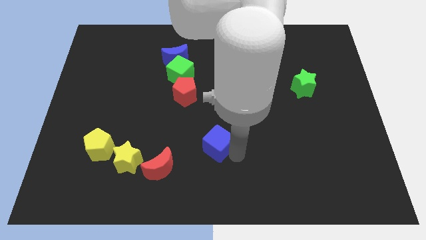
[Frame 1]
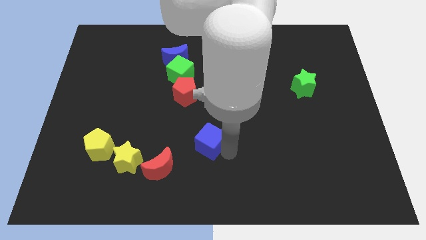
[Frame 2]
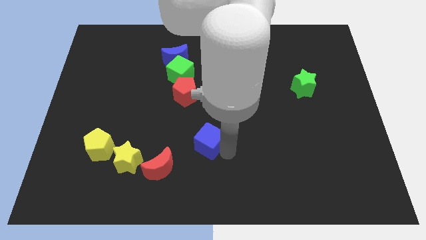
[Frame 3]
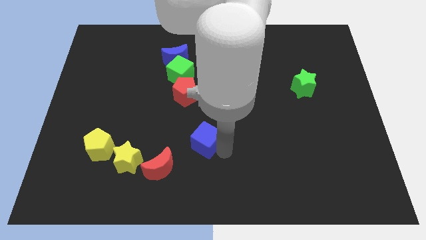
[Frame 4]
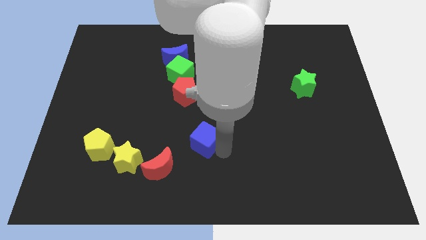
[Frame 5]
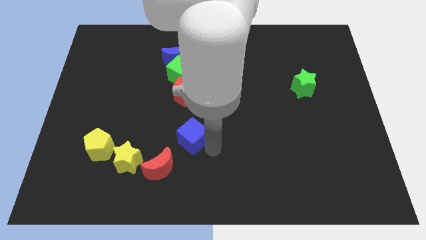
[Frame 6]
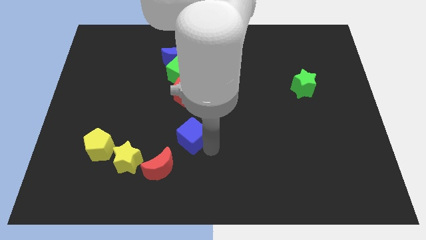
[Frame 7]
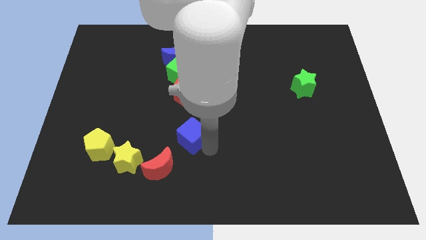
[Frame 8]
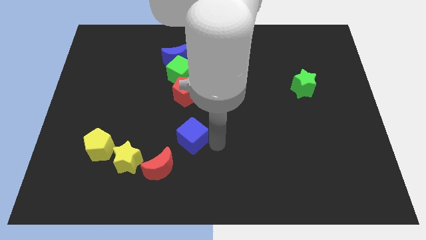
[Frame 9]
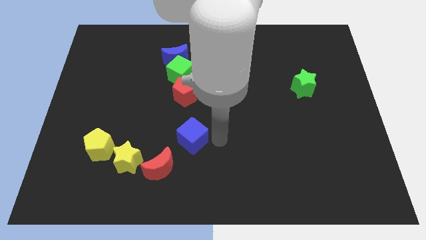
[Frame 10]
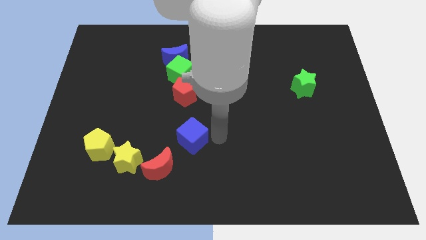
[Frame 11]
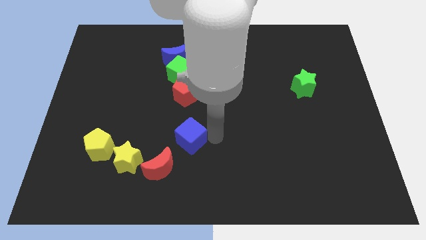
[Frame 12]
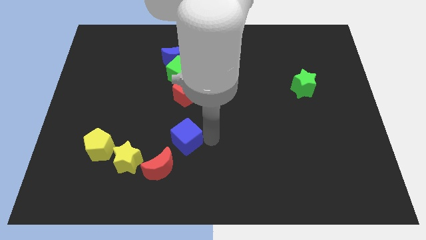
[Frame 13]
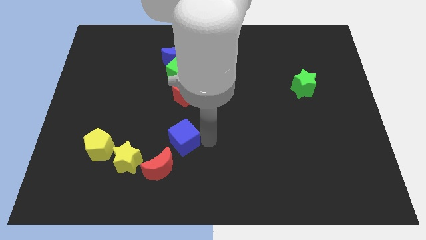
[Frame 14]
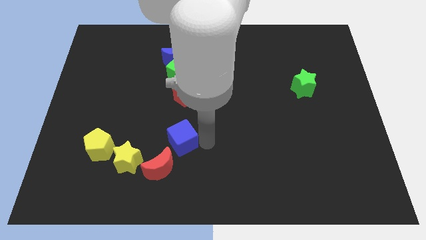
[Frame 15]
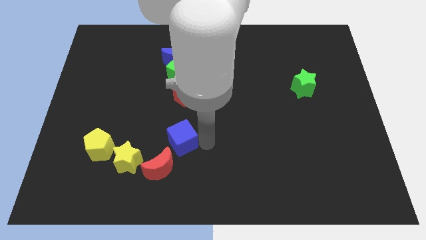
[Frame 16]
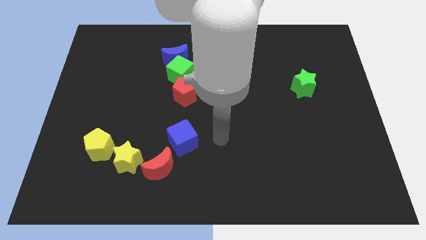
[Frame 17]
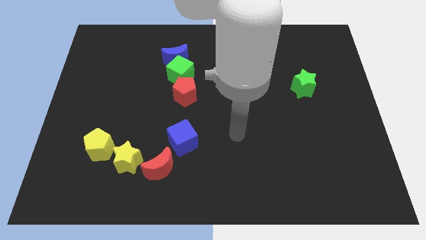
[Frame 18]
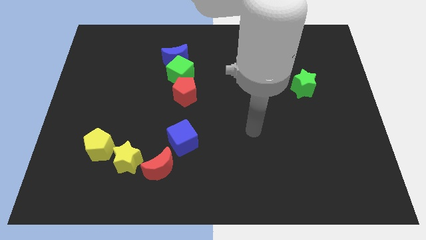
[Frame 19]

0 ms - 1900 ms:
put the blue cube vertically below the red pentagon

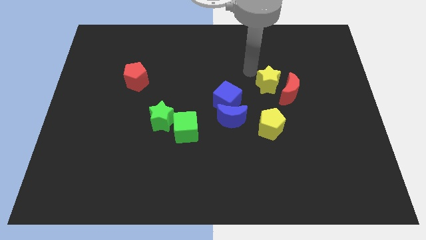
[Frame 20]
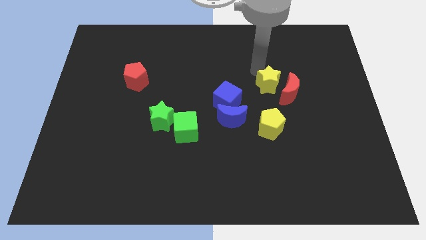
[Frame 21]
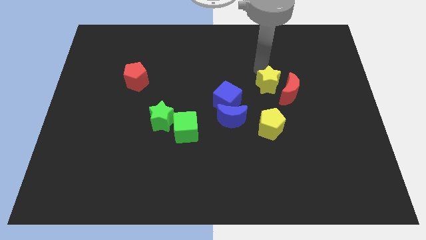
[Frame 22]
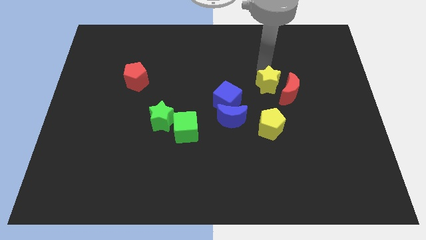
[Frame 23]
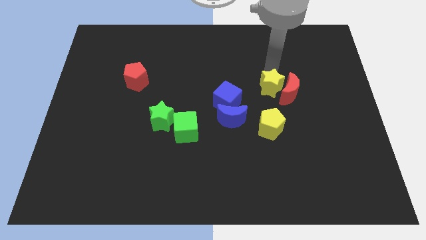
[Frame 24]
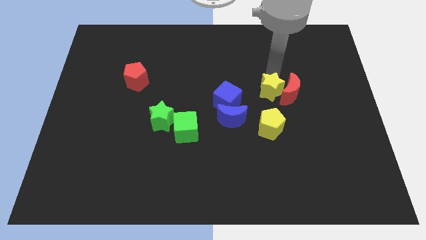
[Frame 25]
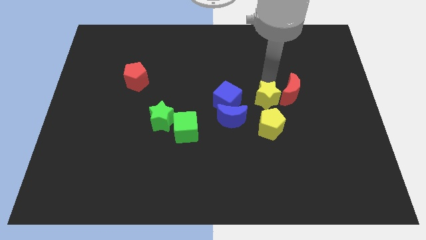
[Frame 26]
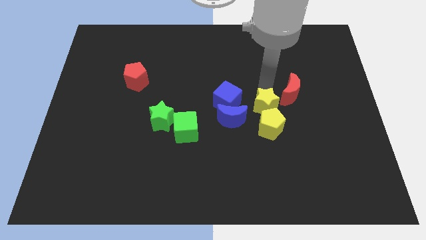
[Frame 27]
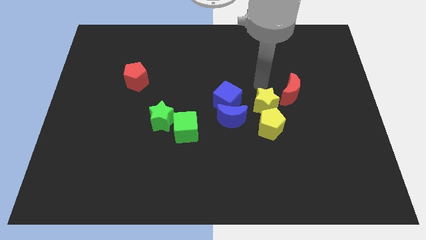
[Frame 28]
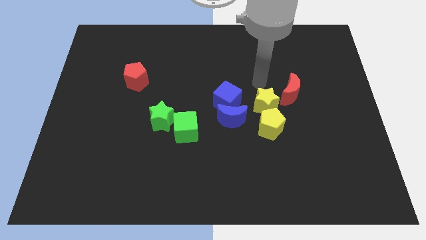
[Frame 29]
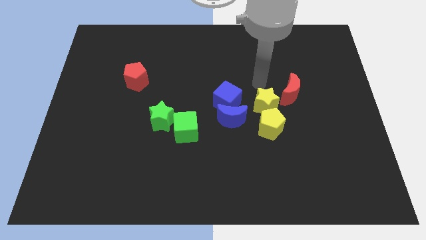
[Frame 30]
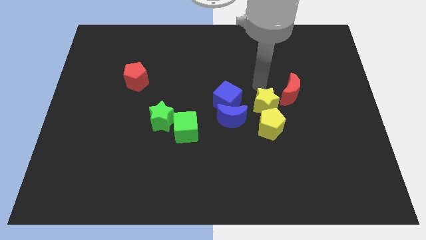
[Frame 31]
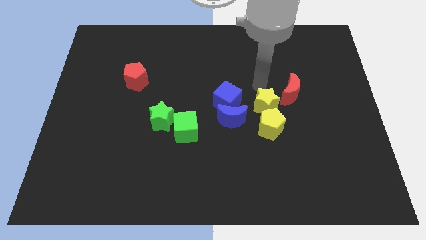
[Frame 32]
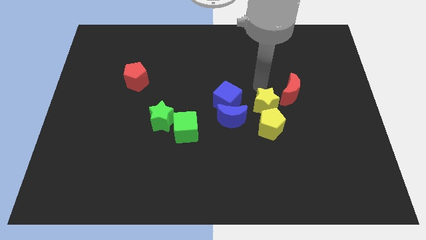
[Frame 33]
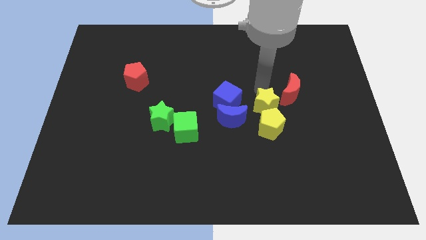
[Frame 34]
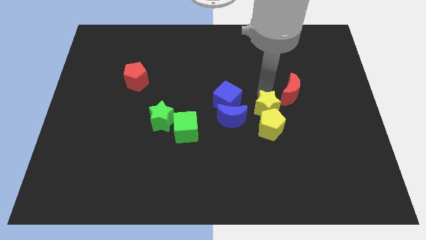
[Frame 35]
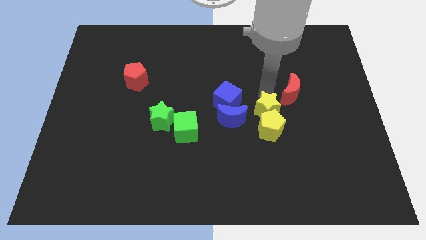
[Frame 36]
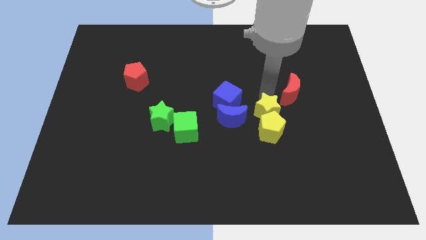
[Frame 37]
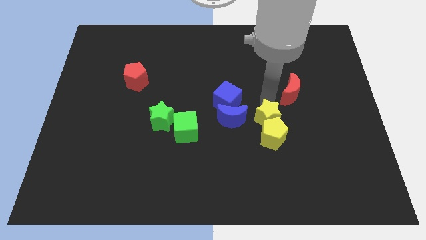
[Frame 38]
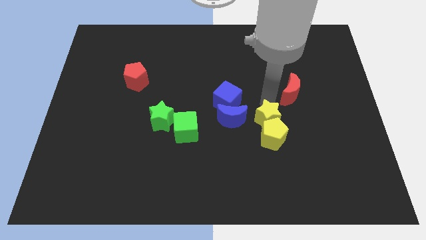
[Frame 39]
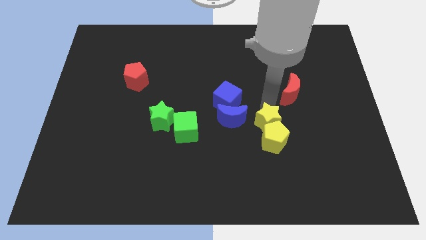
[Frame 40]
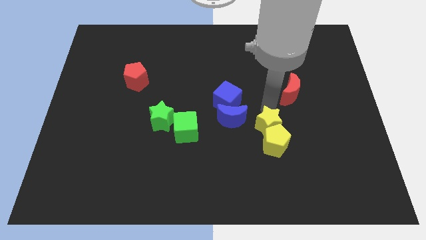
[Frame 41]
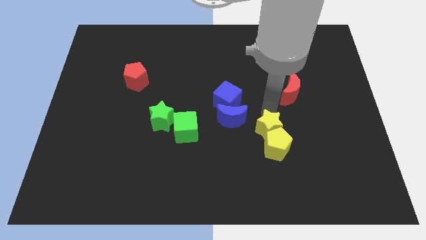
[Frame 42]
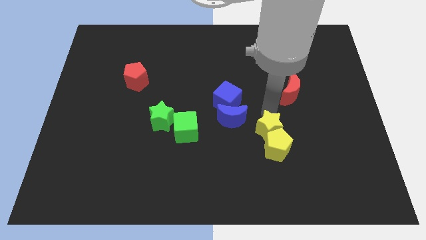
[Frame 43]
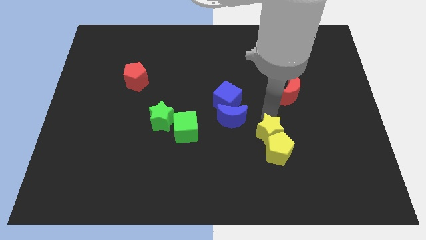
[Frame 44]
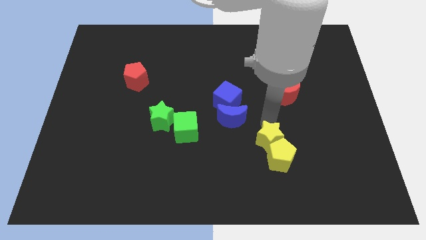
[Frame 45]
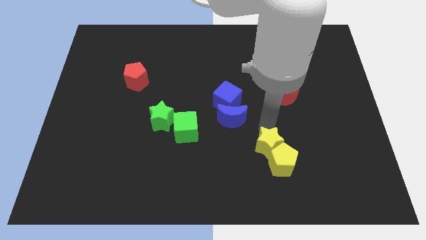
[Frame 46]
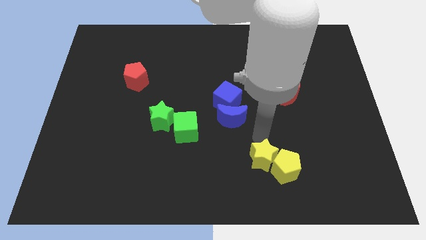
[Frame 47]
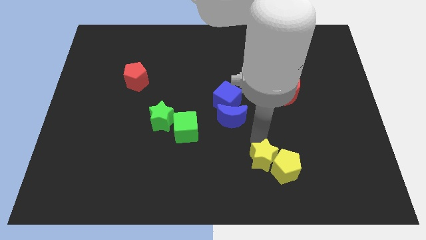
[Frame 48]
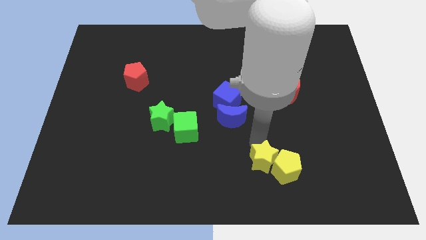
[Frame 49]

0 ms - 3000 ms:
move the yellow star into yellow pentagon

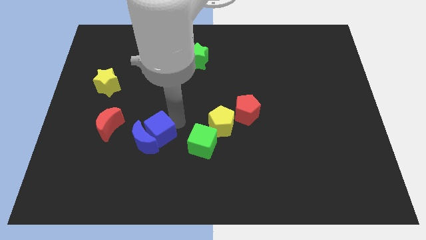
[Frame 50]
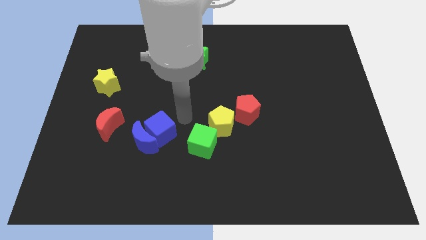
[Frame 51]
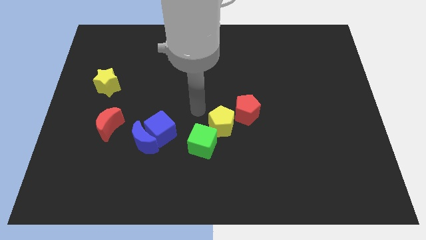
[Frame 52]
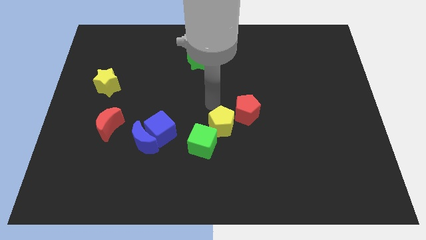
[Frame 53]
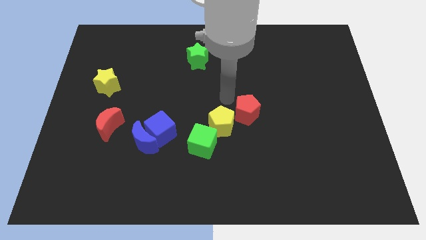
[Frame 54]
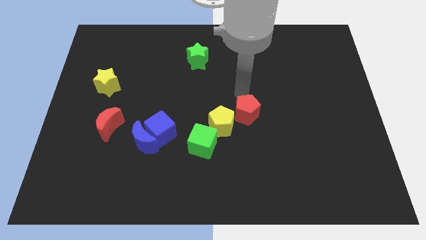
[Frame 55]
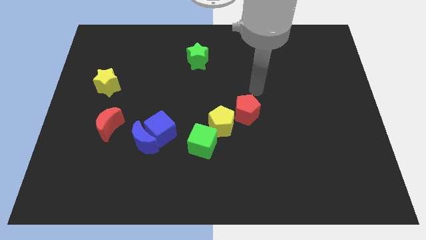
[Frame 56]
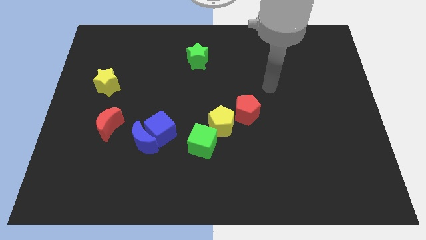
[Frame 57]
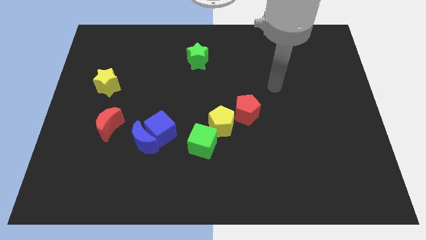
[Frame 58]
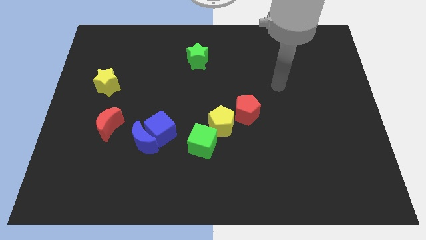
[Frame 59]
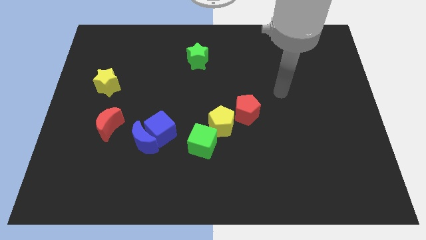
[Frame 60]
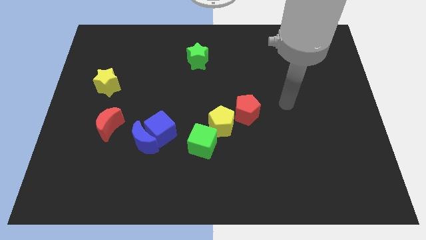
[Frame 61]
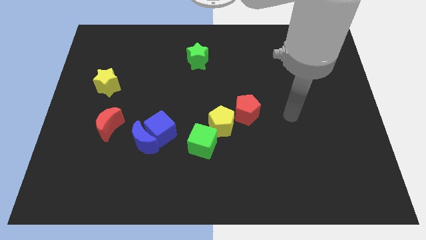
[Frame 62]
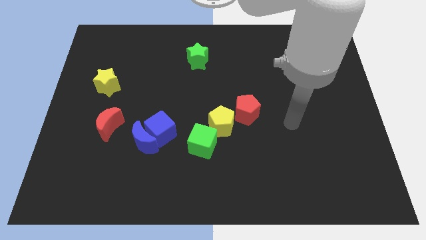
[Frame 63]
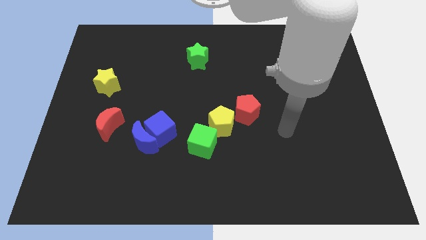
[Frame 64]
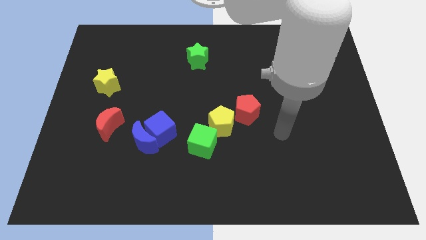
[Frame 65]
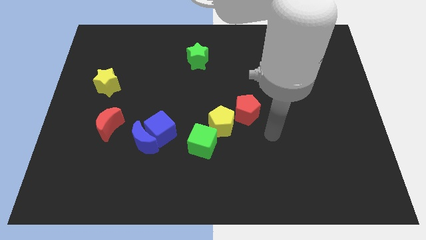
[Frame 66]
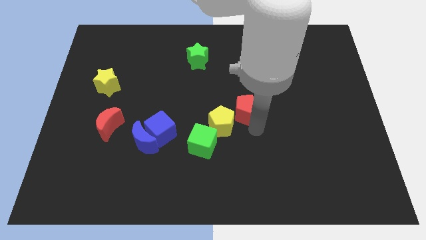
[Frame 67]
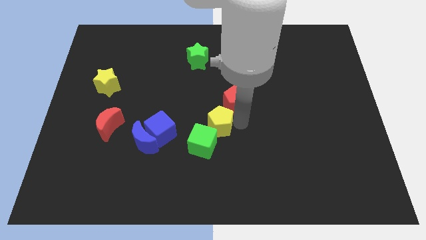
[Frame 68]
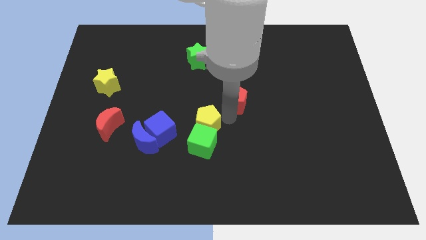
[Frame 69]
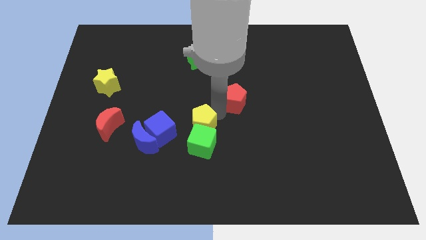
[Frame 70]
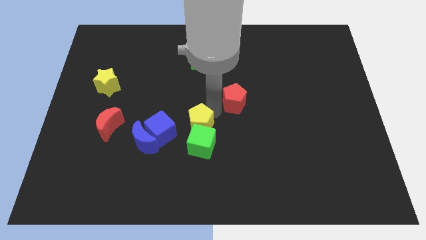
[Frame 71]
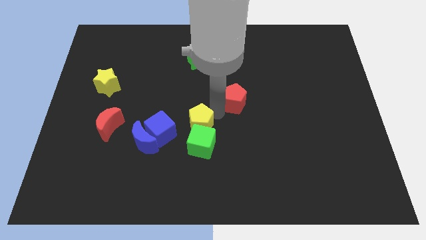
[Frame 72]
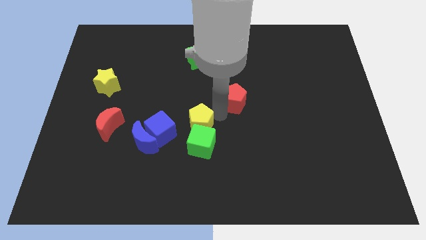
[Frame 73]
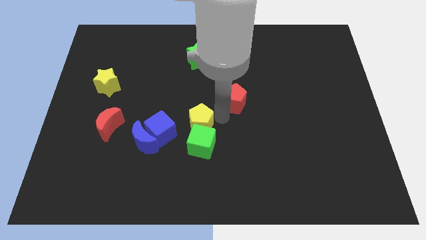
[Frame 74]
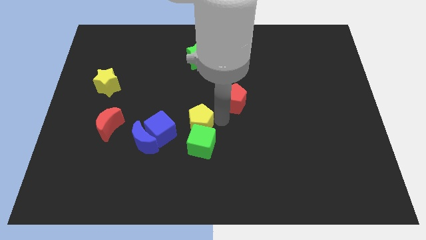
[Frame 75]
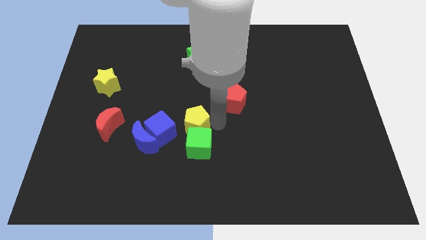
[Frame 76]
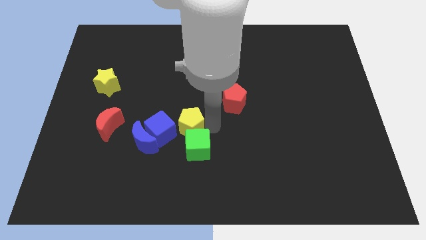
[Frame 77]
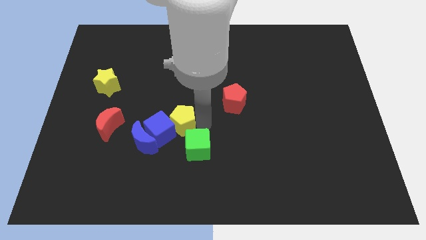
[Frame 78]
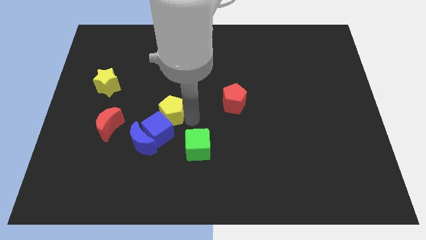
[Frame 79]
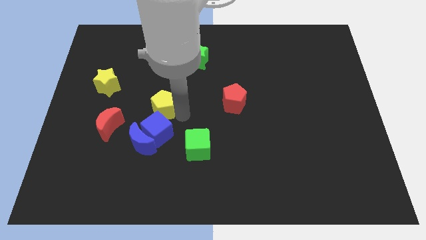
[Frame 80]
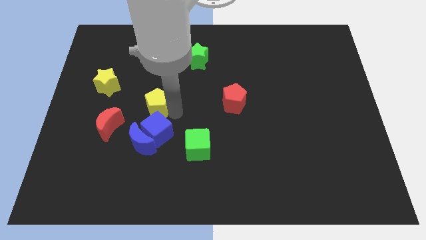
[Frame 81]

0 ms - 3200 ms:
push the yellow pentagon towards the yellow star

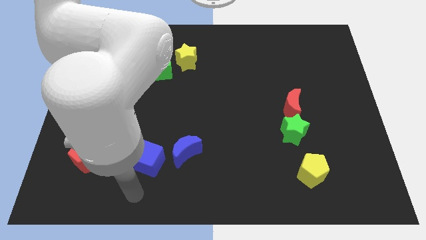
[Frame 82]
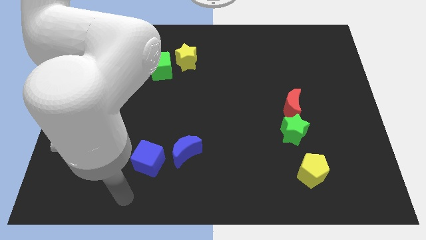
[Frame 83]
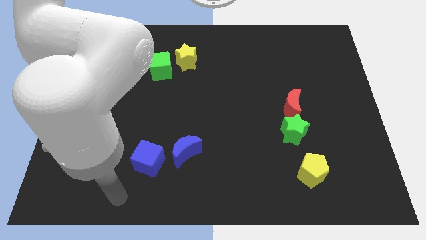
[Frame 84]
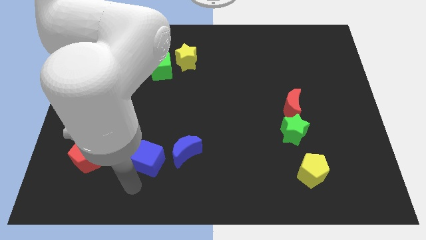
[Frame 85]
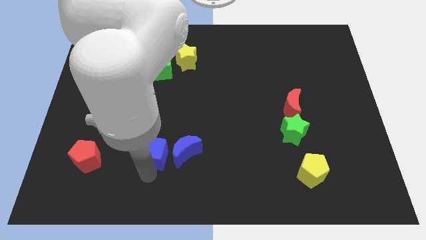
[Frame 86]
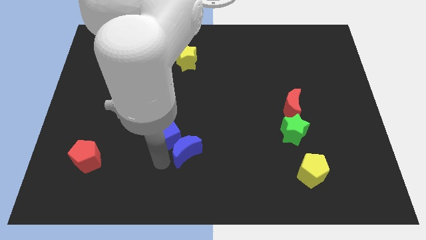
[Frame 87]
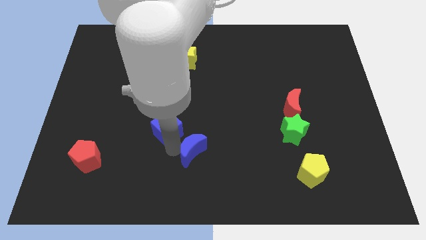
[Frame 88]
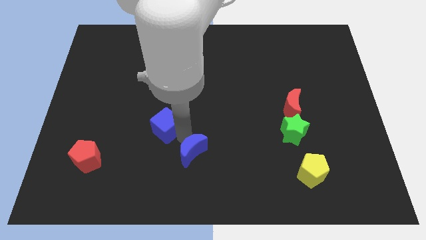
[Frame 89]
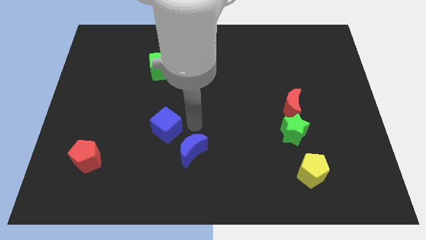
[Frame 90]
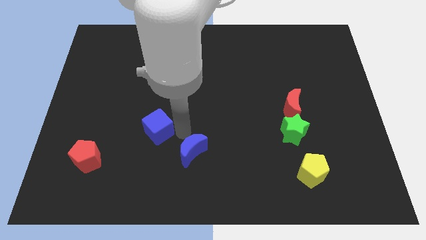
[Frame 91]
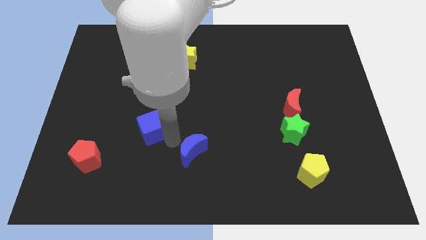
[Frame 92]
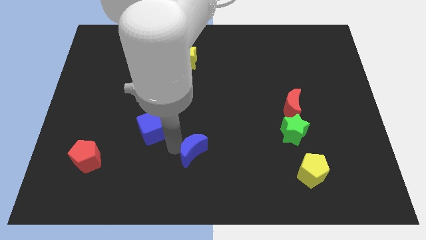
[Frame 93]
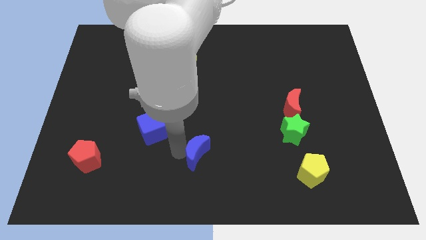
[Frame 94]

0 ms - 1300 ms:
point your arm diagonally in between both the blue blocks
